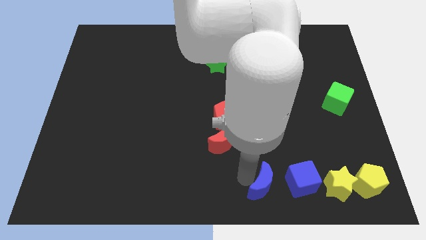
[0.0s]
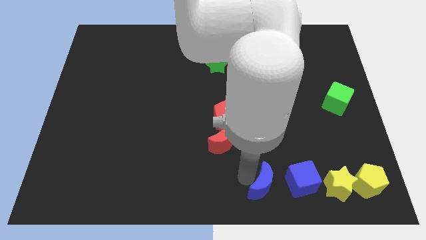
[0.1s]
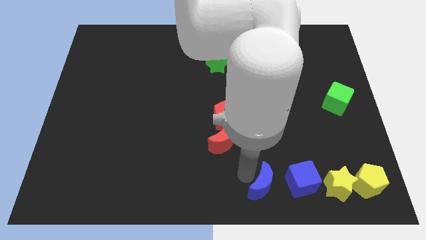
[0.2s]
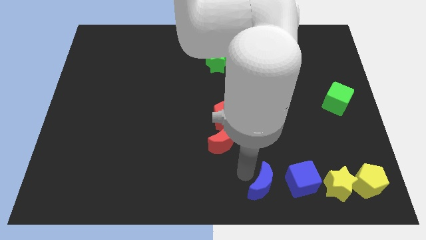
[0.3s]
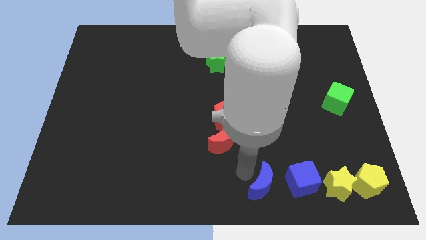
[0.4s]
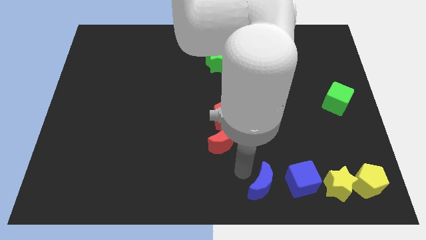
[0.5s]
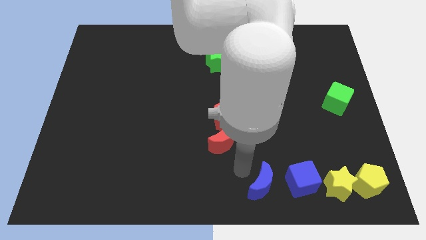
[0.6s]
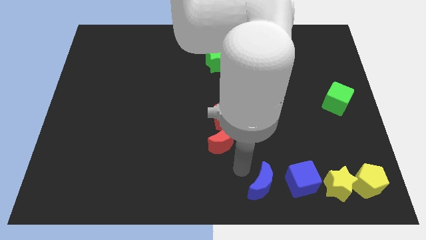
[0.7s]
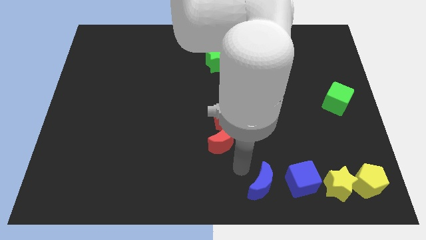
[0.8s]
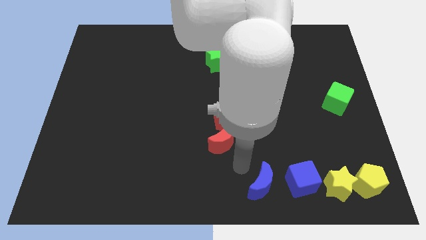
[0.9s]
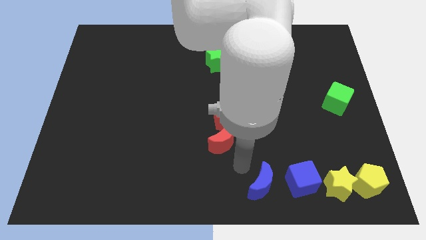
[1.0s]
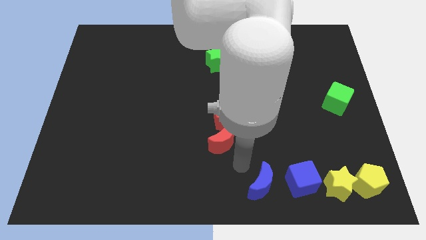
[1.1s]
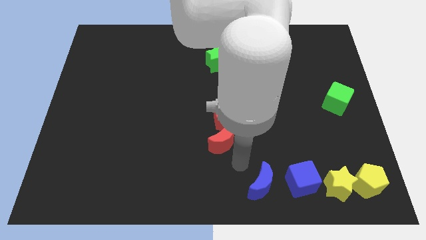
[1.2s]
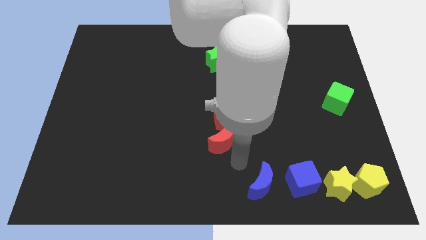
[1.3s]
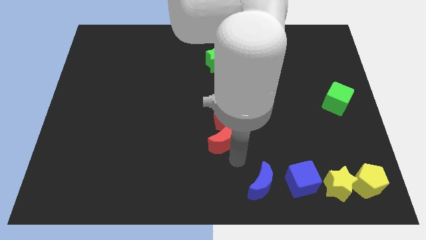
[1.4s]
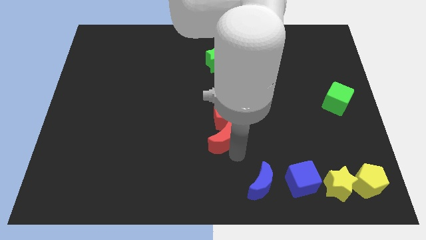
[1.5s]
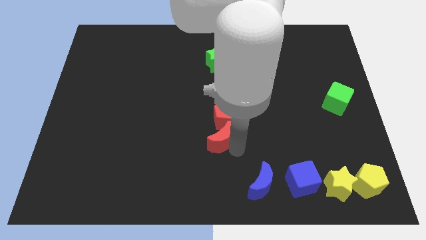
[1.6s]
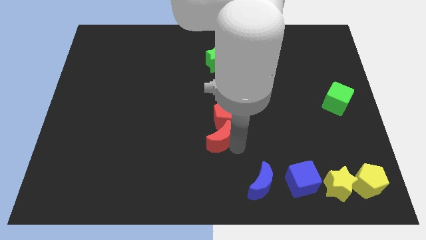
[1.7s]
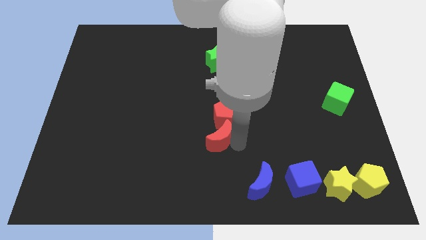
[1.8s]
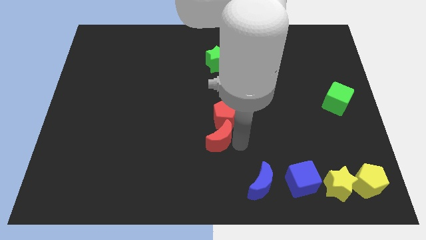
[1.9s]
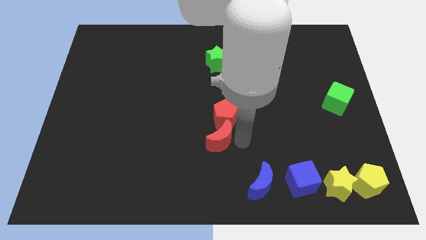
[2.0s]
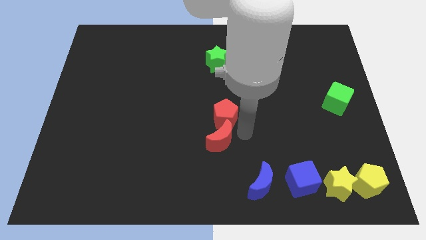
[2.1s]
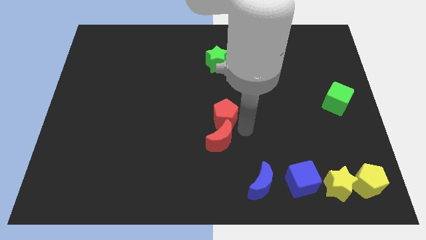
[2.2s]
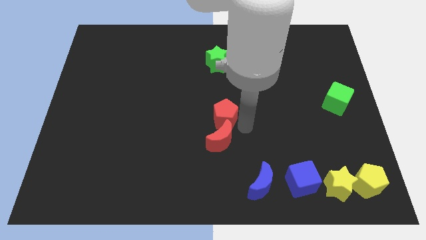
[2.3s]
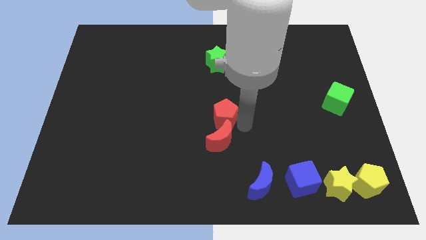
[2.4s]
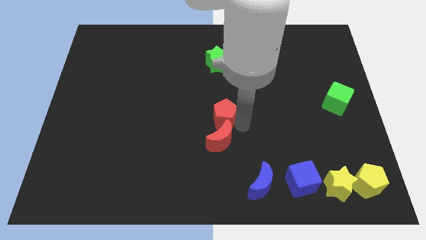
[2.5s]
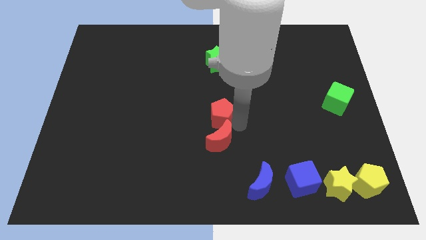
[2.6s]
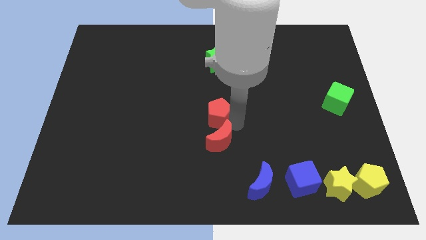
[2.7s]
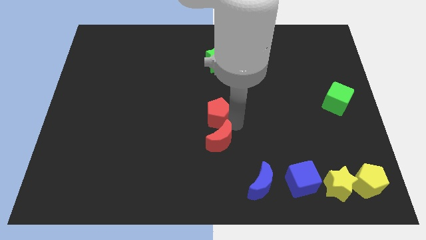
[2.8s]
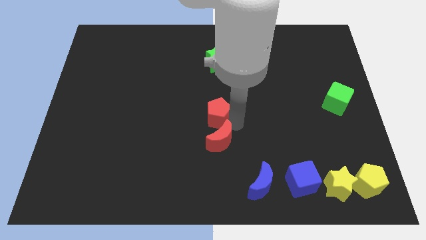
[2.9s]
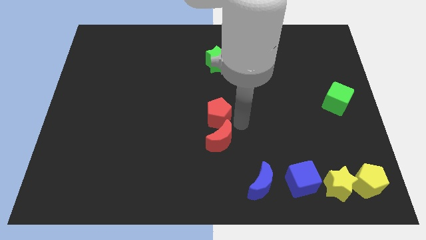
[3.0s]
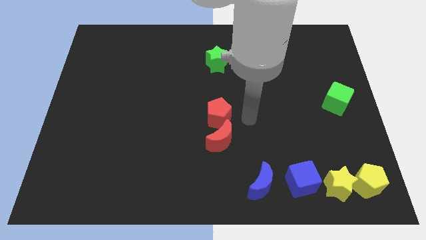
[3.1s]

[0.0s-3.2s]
move the red pentagon slightly to the left side

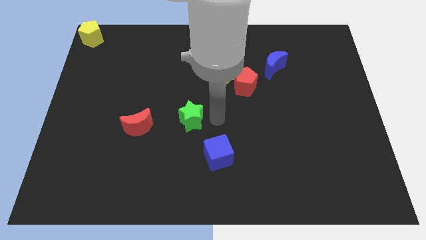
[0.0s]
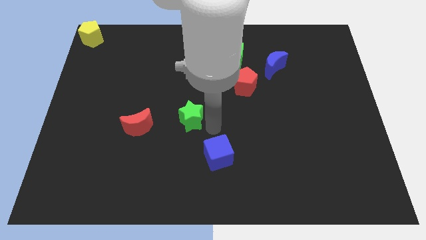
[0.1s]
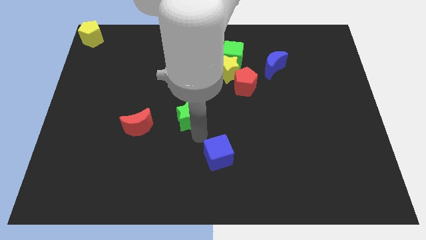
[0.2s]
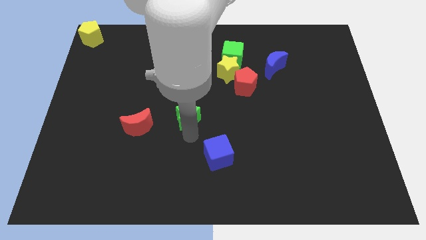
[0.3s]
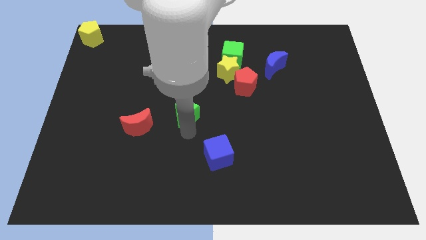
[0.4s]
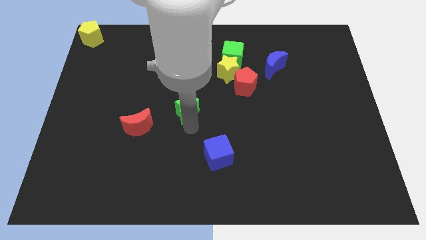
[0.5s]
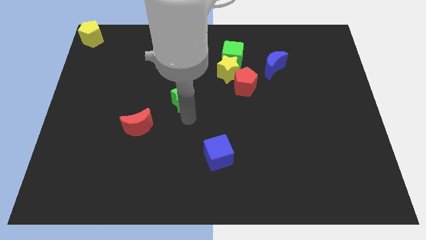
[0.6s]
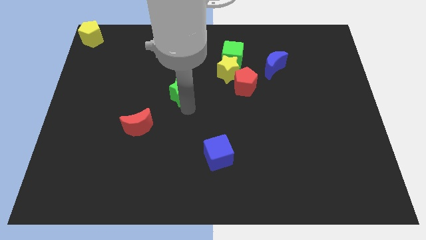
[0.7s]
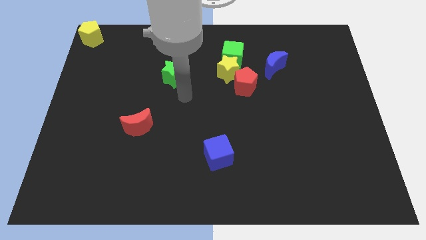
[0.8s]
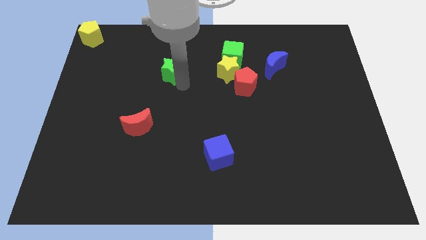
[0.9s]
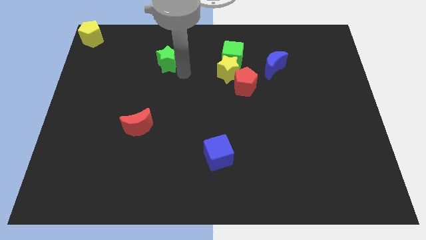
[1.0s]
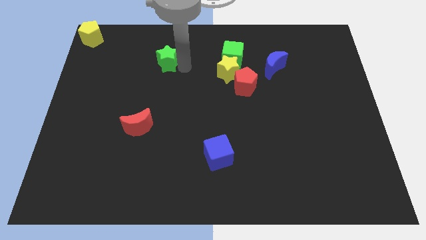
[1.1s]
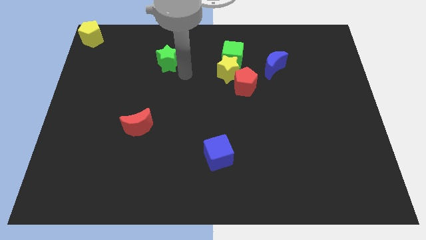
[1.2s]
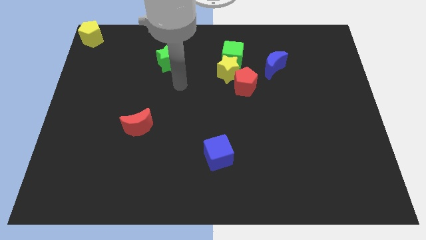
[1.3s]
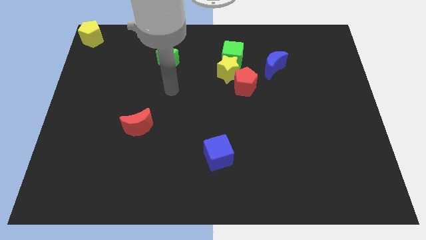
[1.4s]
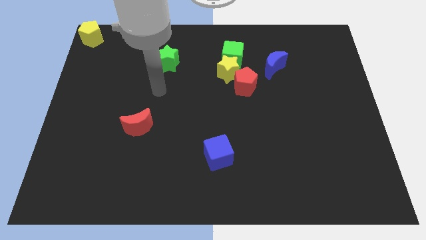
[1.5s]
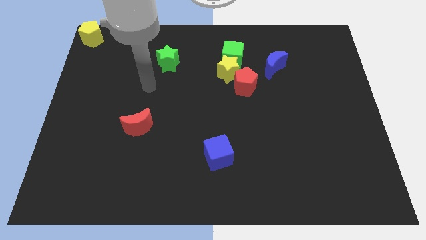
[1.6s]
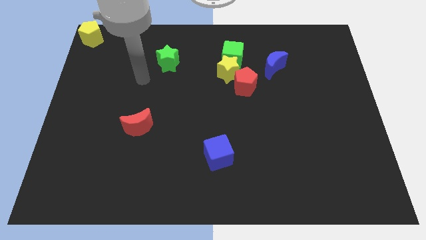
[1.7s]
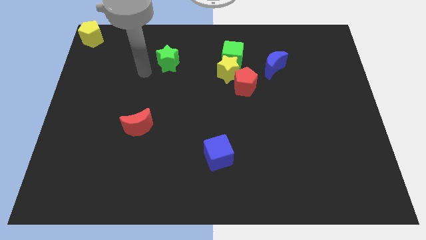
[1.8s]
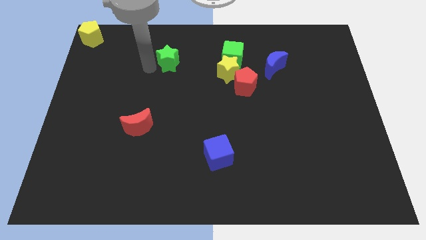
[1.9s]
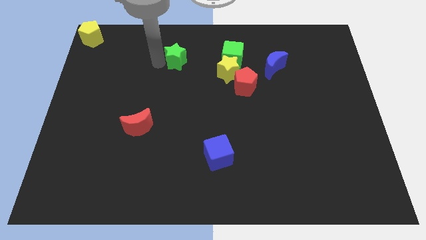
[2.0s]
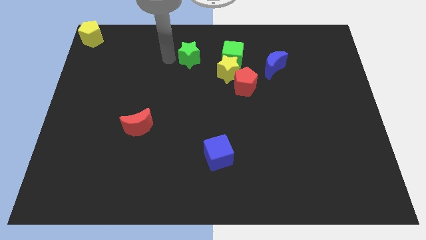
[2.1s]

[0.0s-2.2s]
move the green star upwards

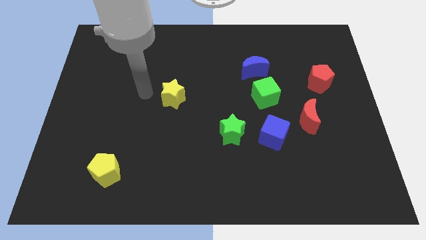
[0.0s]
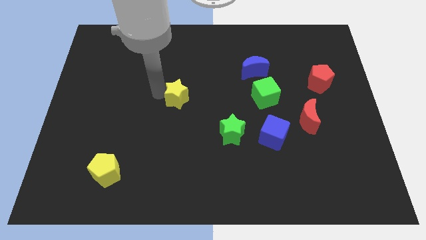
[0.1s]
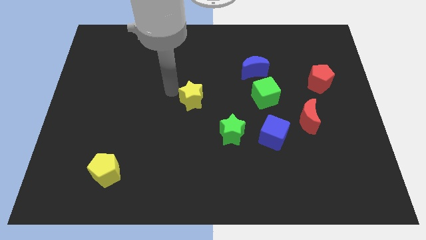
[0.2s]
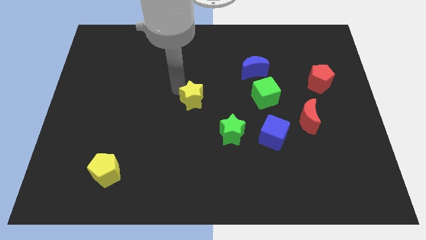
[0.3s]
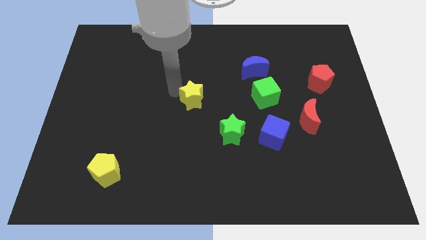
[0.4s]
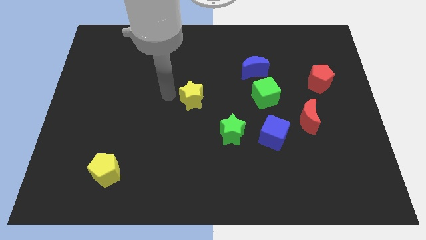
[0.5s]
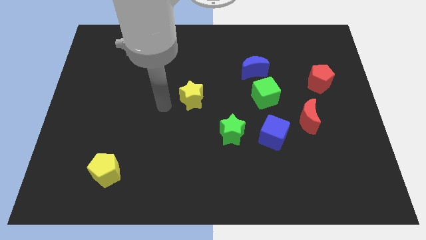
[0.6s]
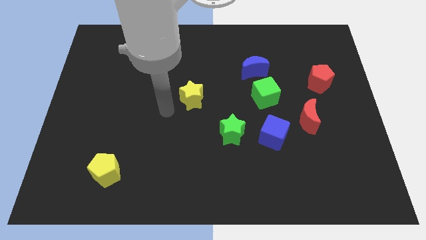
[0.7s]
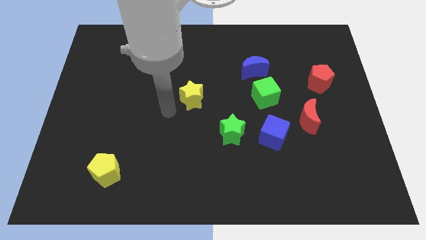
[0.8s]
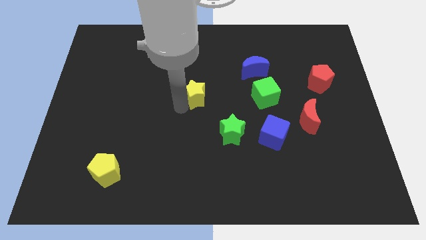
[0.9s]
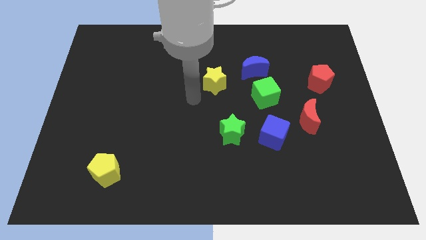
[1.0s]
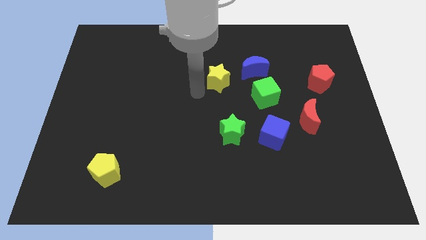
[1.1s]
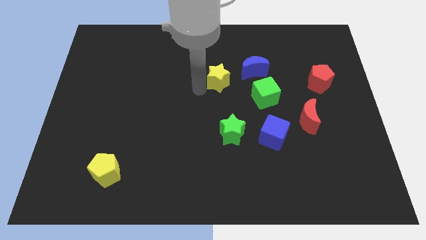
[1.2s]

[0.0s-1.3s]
place the yellow star vertically above the green star

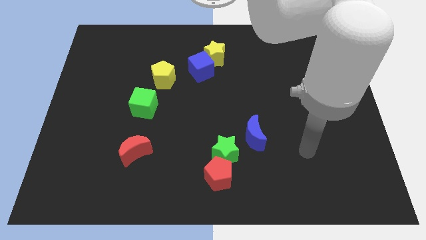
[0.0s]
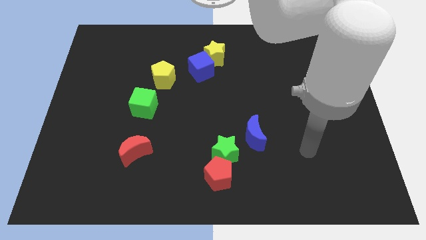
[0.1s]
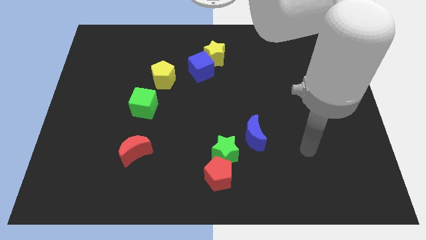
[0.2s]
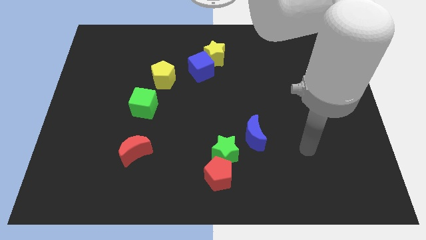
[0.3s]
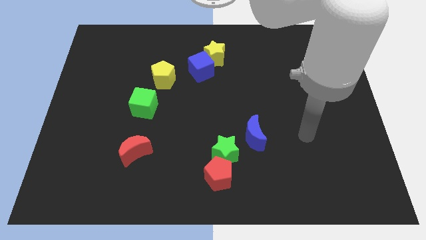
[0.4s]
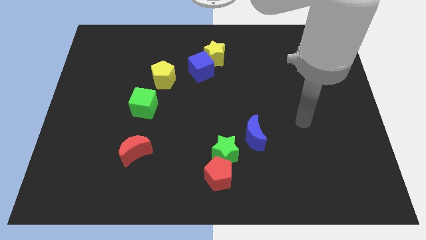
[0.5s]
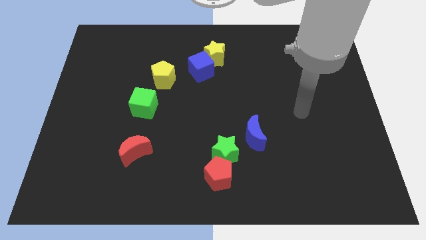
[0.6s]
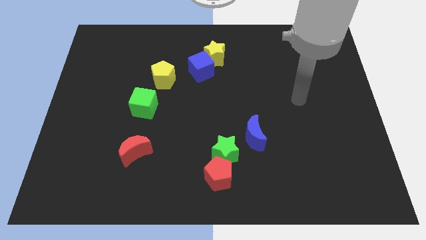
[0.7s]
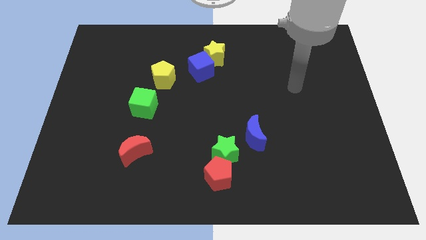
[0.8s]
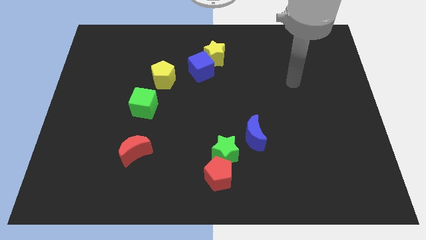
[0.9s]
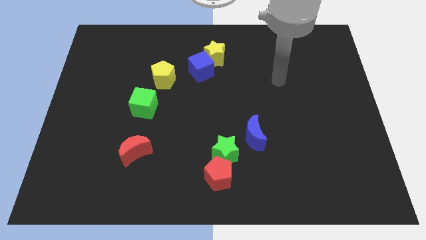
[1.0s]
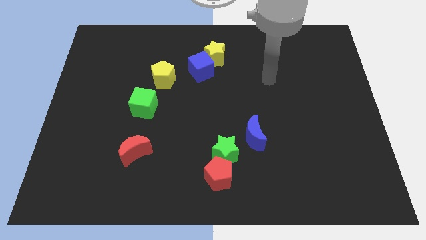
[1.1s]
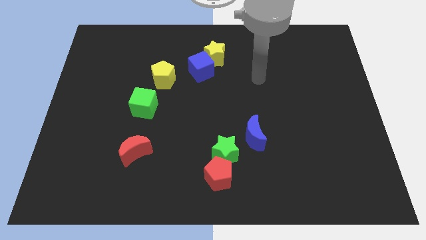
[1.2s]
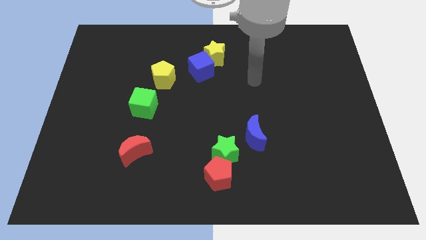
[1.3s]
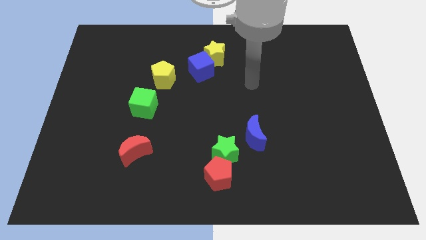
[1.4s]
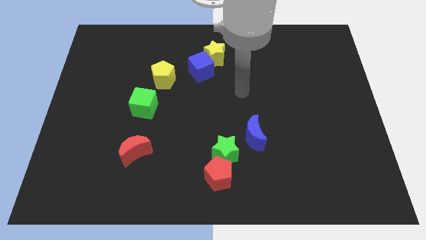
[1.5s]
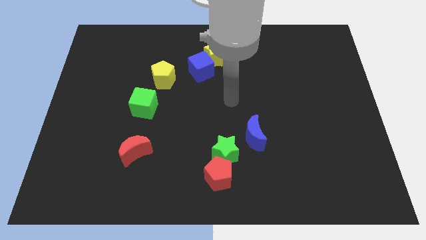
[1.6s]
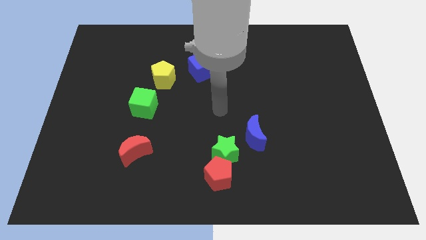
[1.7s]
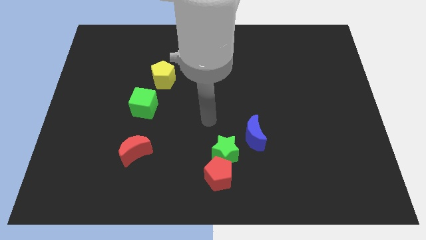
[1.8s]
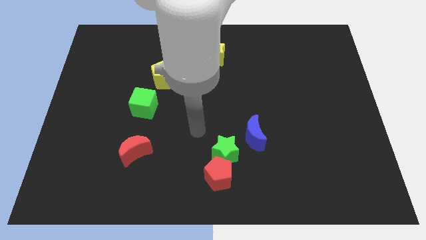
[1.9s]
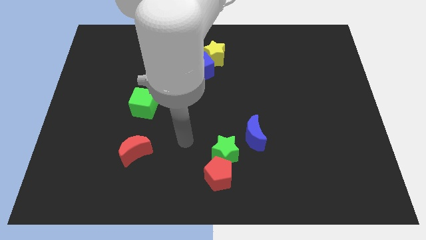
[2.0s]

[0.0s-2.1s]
place the arm in between the red moon and green star

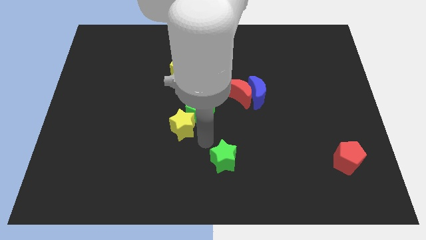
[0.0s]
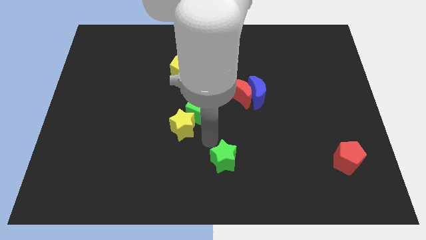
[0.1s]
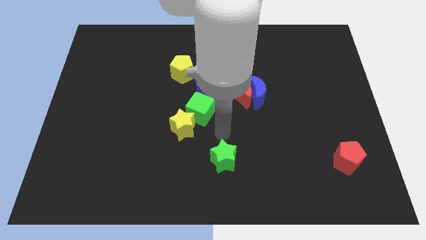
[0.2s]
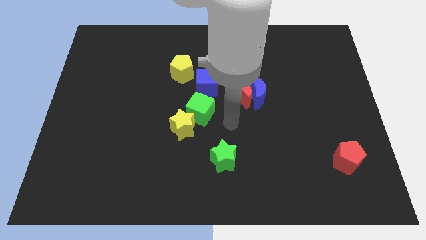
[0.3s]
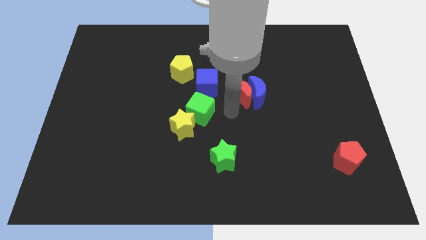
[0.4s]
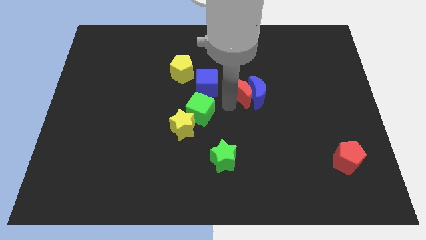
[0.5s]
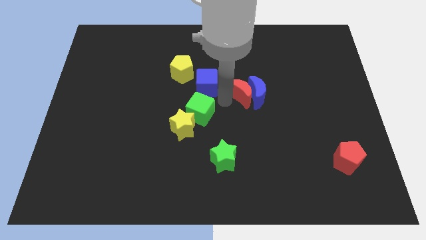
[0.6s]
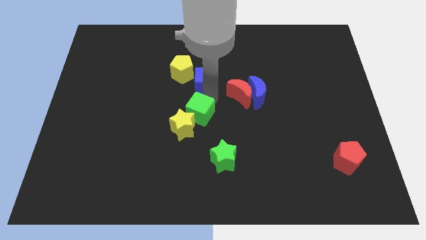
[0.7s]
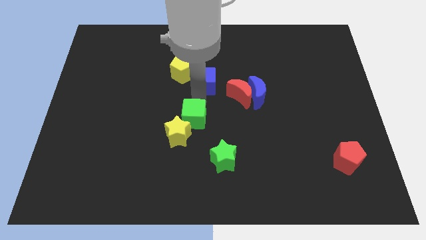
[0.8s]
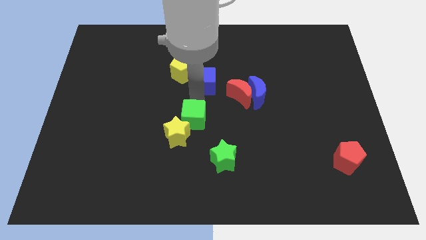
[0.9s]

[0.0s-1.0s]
separate the cubes
